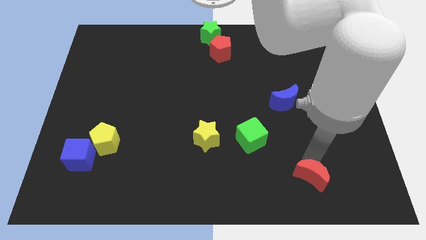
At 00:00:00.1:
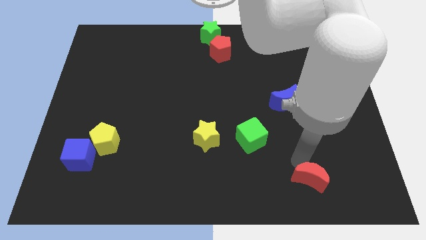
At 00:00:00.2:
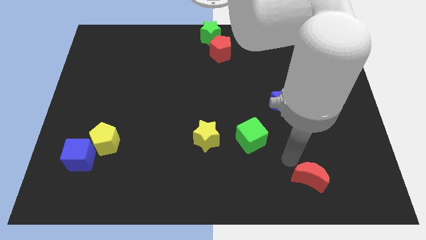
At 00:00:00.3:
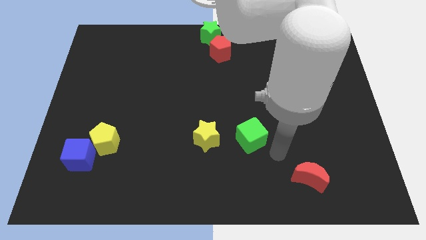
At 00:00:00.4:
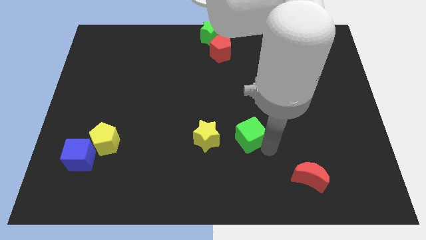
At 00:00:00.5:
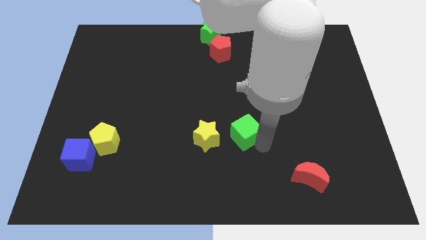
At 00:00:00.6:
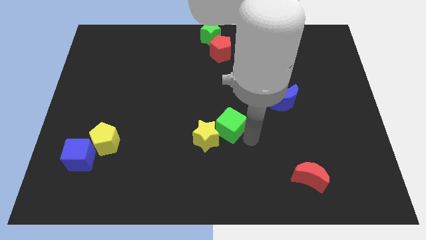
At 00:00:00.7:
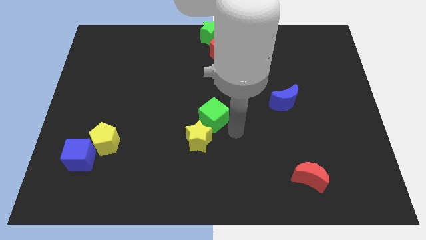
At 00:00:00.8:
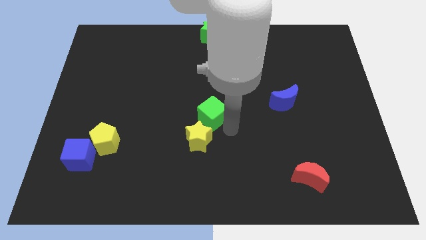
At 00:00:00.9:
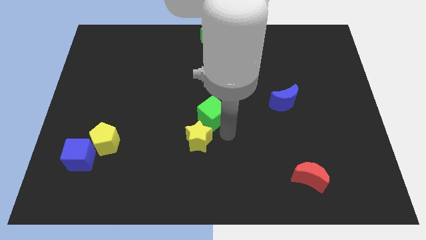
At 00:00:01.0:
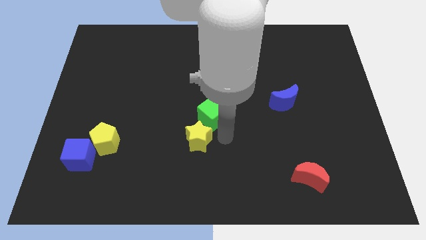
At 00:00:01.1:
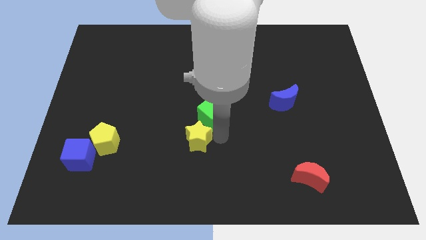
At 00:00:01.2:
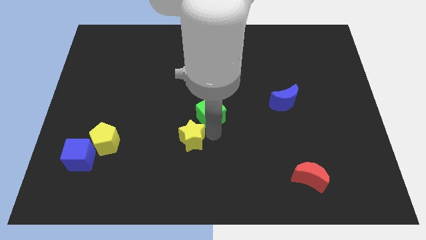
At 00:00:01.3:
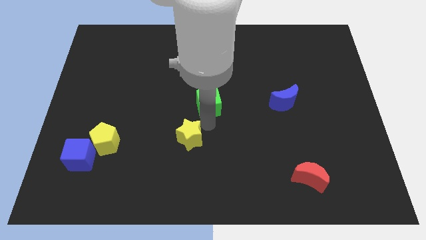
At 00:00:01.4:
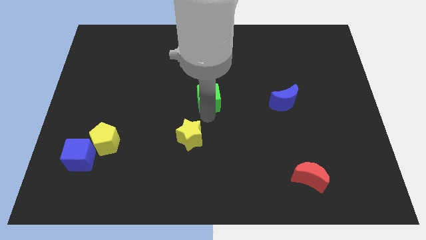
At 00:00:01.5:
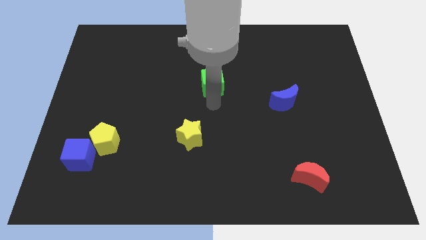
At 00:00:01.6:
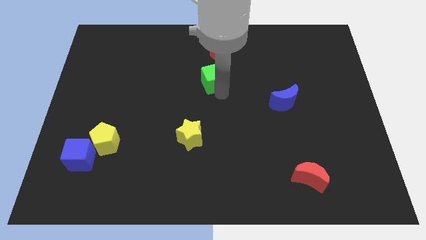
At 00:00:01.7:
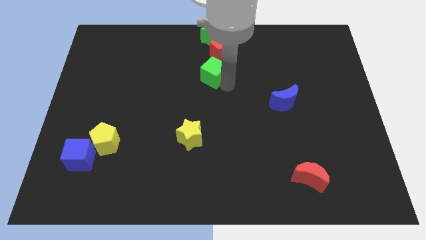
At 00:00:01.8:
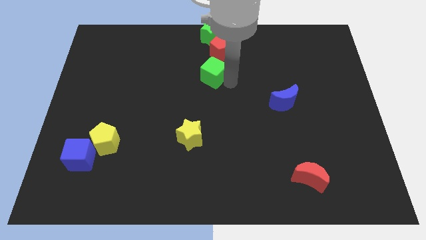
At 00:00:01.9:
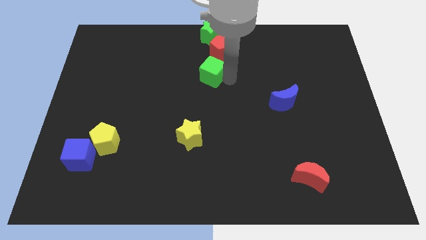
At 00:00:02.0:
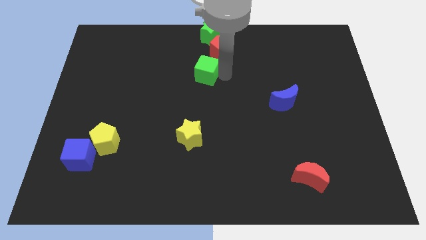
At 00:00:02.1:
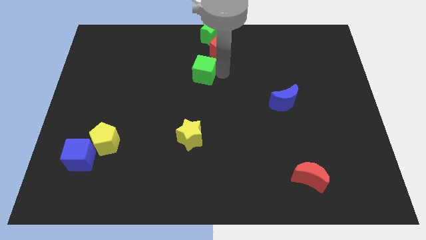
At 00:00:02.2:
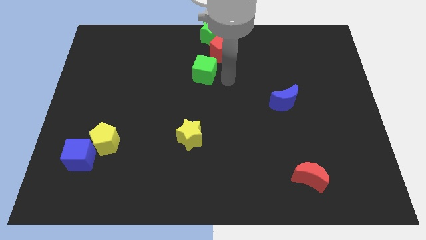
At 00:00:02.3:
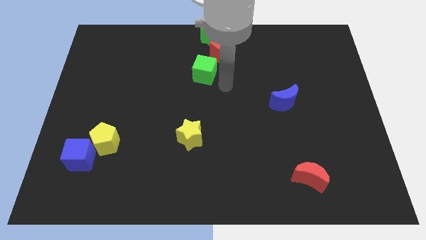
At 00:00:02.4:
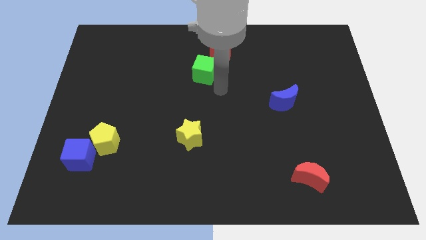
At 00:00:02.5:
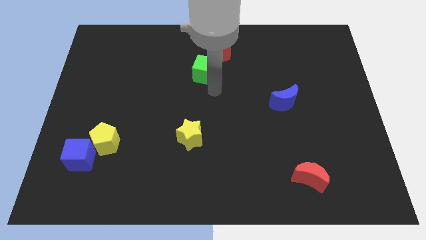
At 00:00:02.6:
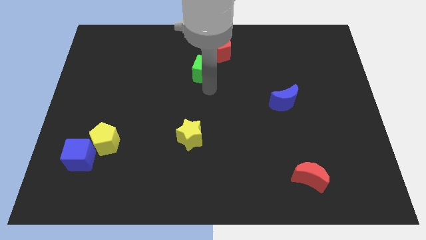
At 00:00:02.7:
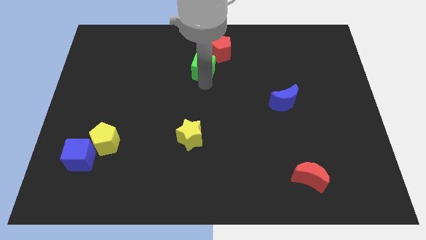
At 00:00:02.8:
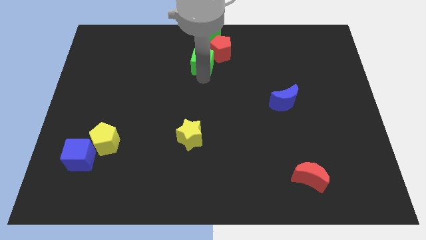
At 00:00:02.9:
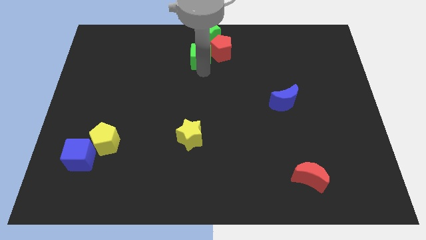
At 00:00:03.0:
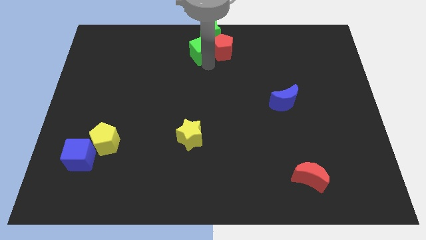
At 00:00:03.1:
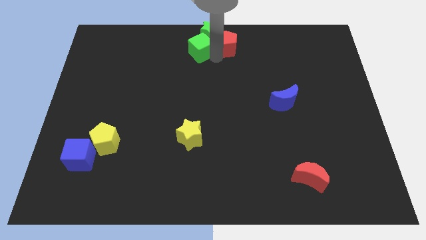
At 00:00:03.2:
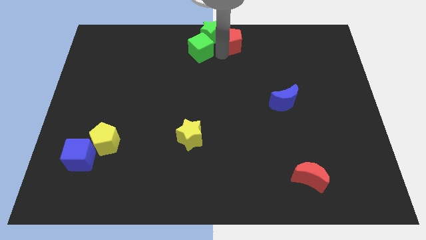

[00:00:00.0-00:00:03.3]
move the green cube below the green star

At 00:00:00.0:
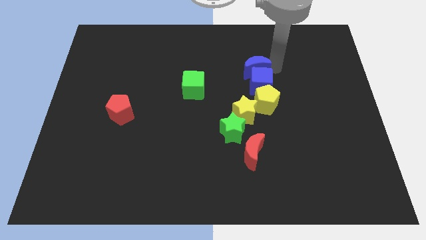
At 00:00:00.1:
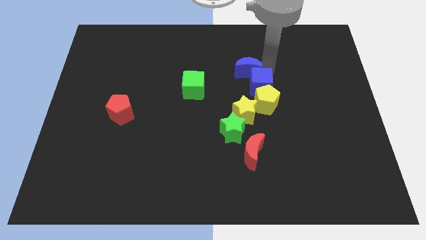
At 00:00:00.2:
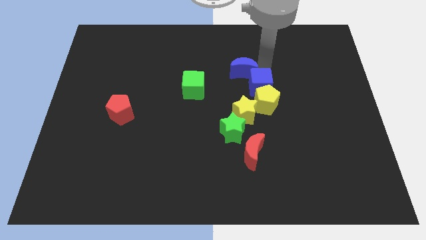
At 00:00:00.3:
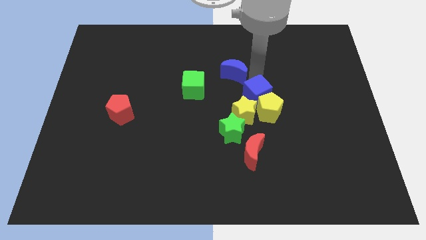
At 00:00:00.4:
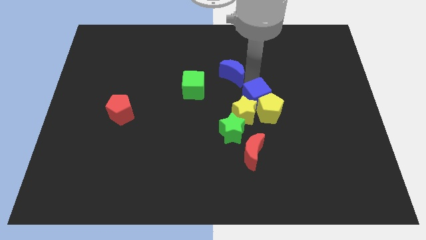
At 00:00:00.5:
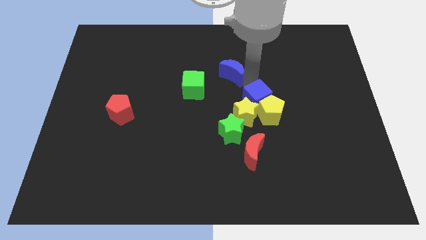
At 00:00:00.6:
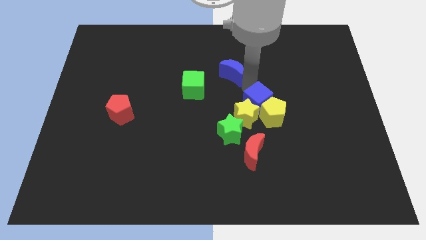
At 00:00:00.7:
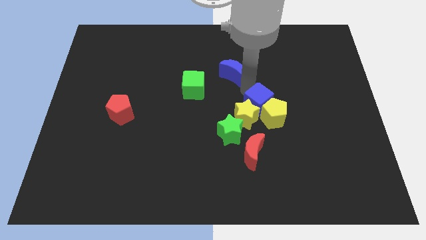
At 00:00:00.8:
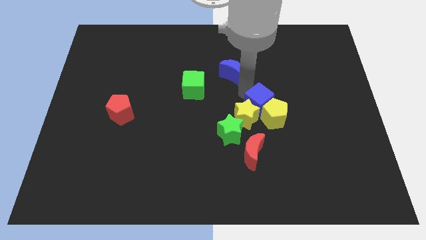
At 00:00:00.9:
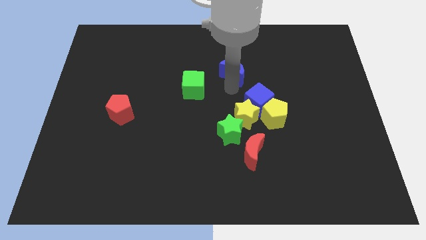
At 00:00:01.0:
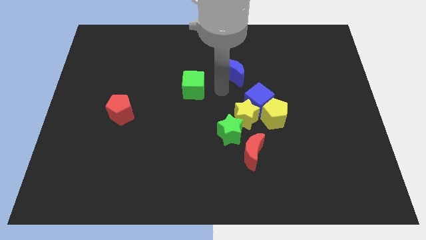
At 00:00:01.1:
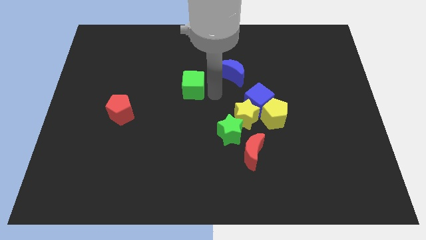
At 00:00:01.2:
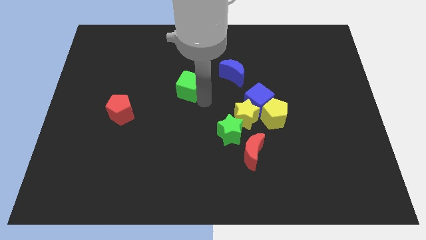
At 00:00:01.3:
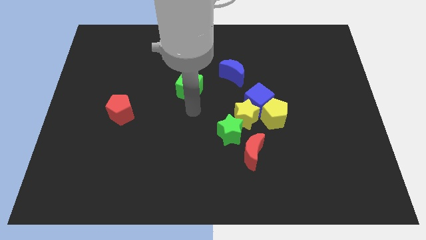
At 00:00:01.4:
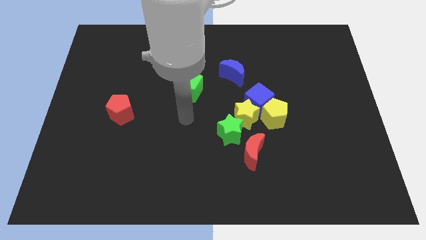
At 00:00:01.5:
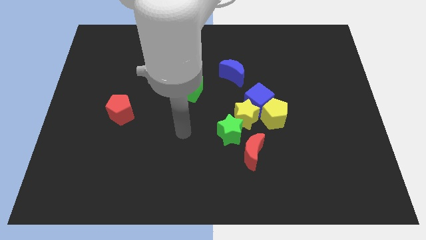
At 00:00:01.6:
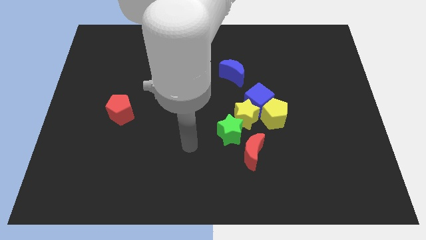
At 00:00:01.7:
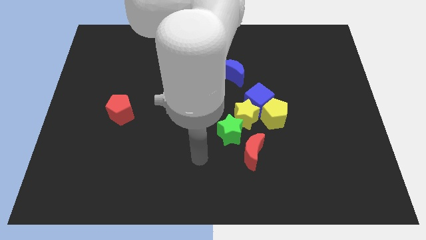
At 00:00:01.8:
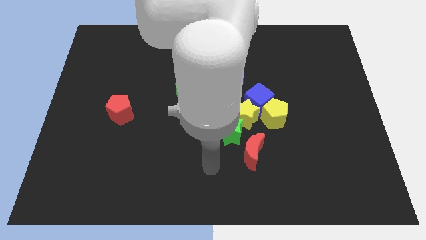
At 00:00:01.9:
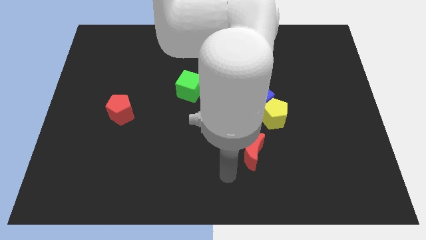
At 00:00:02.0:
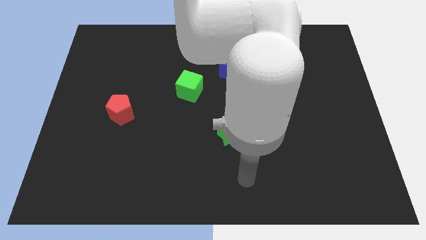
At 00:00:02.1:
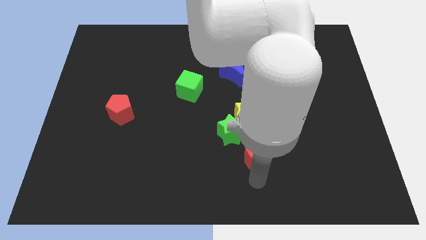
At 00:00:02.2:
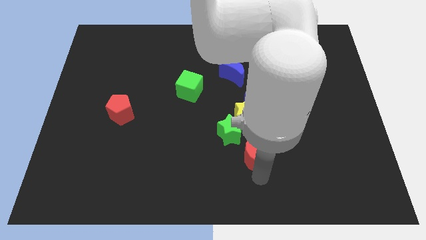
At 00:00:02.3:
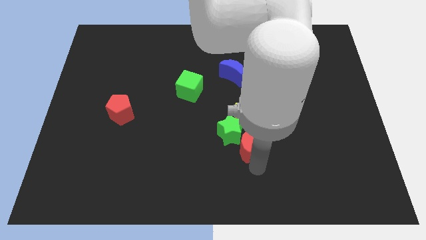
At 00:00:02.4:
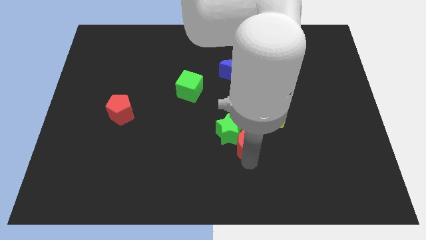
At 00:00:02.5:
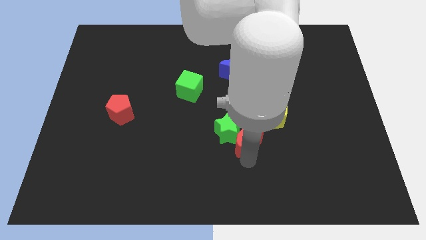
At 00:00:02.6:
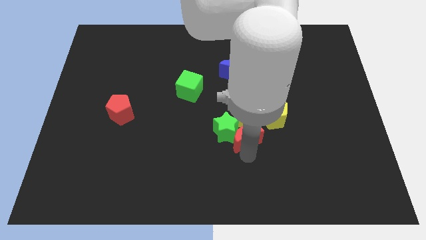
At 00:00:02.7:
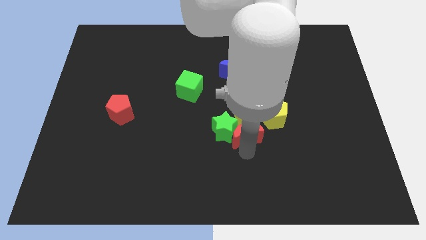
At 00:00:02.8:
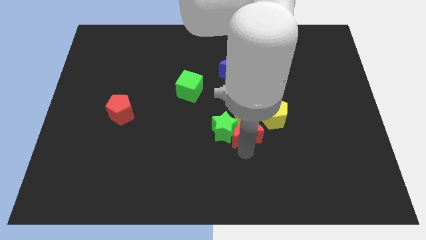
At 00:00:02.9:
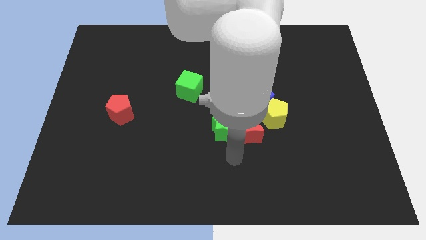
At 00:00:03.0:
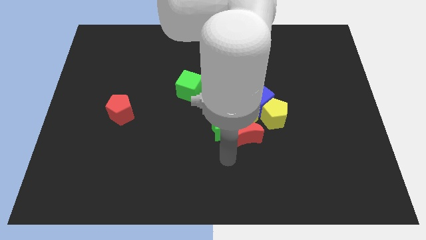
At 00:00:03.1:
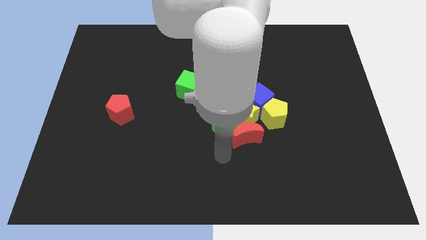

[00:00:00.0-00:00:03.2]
move the red moon slightly into a group of blocks

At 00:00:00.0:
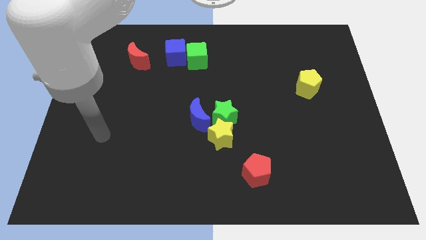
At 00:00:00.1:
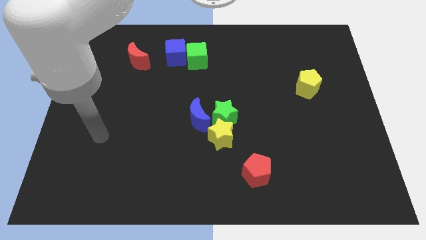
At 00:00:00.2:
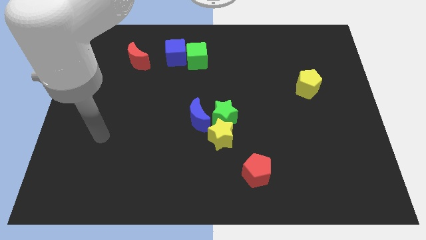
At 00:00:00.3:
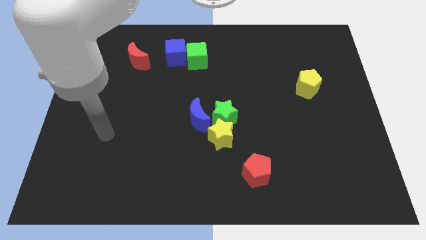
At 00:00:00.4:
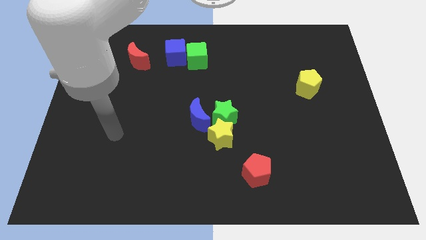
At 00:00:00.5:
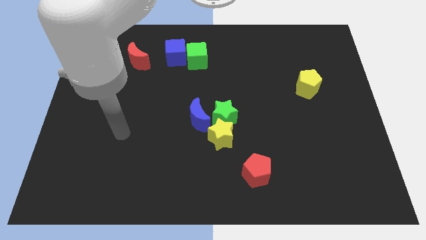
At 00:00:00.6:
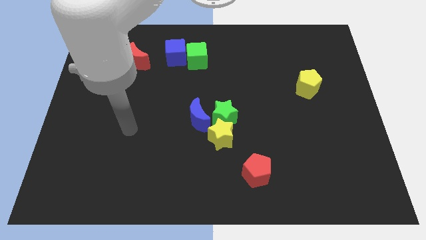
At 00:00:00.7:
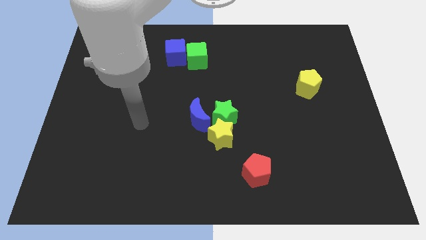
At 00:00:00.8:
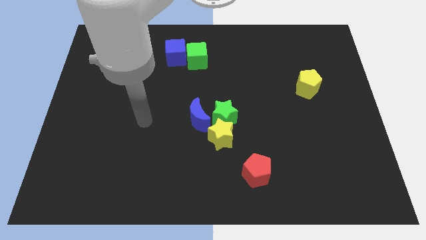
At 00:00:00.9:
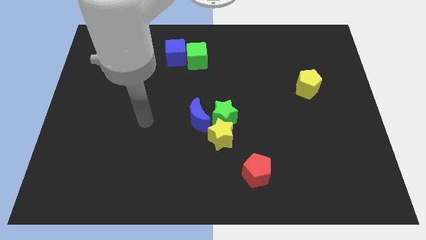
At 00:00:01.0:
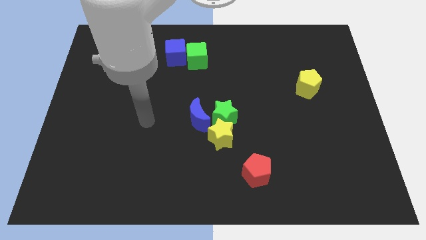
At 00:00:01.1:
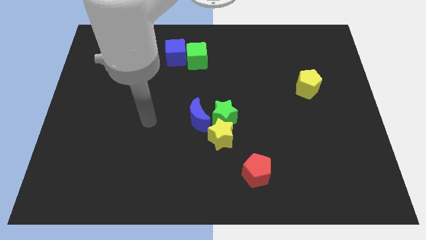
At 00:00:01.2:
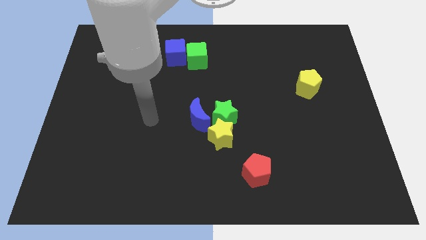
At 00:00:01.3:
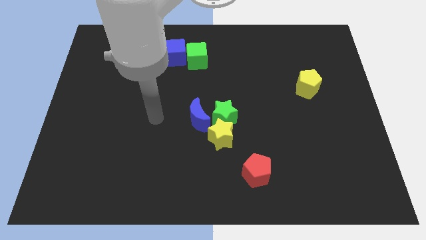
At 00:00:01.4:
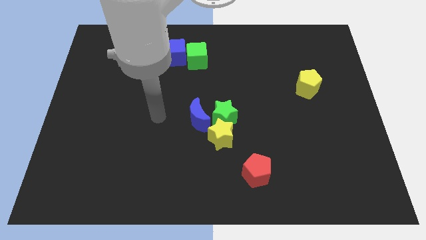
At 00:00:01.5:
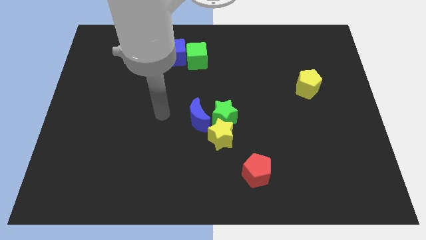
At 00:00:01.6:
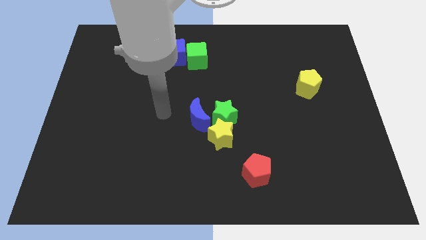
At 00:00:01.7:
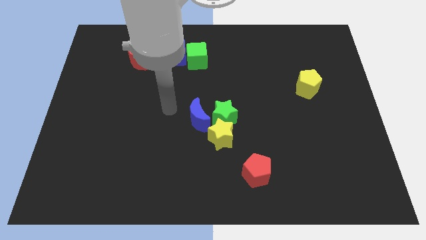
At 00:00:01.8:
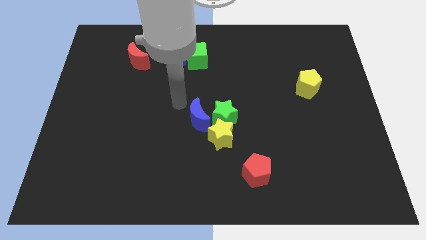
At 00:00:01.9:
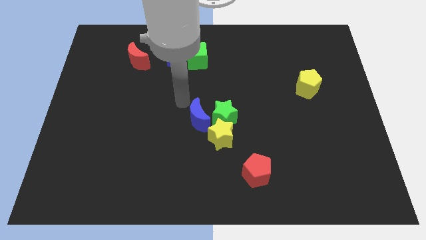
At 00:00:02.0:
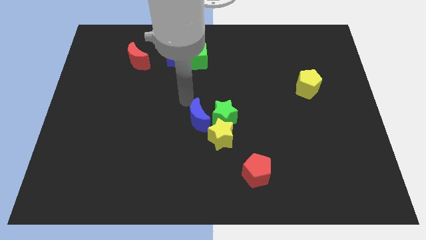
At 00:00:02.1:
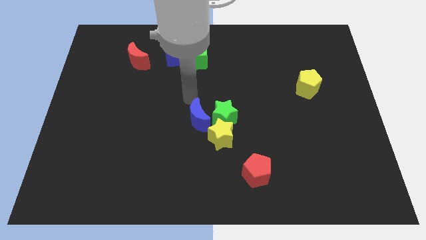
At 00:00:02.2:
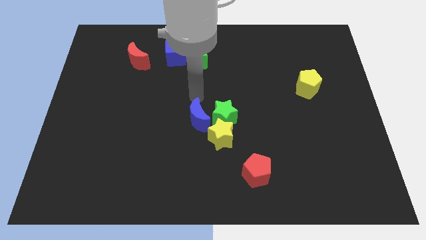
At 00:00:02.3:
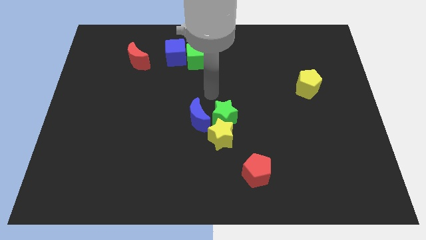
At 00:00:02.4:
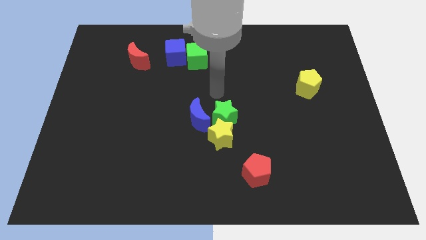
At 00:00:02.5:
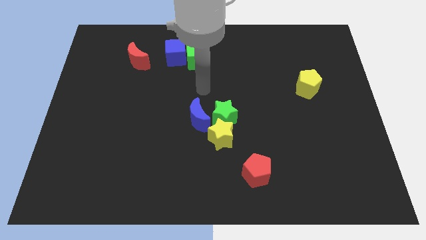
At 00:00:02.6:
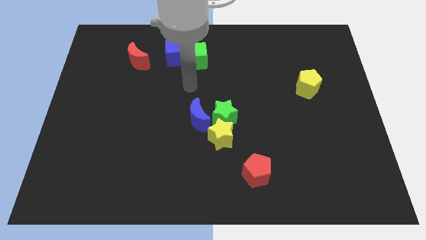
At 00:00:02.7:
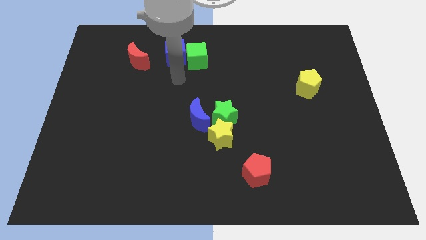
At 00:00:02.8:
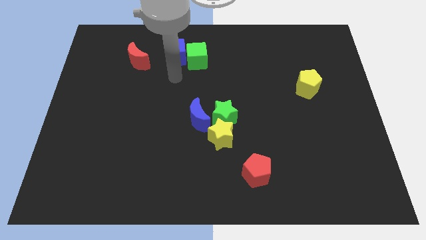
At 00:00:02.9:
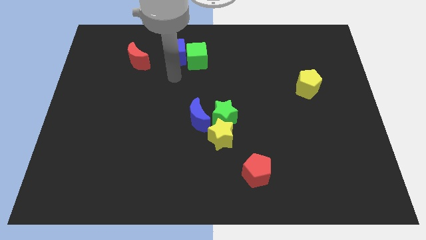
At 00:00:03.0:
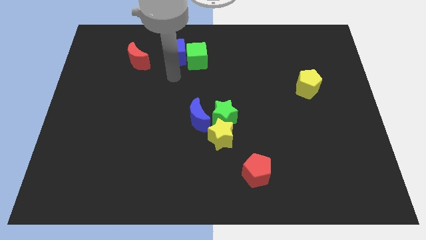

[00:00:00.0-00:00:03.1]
go and point your arm at the bottom side of the blue cube
